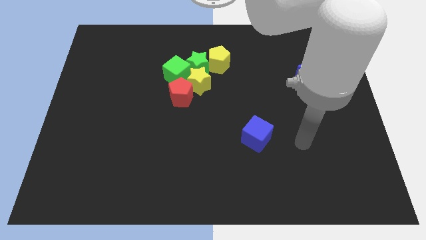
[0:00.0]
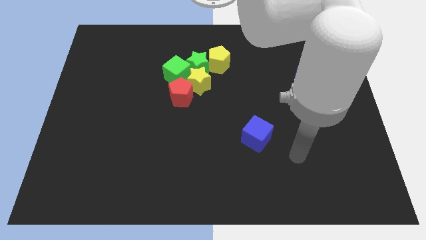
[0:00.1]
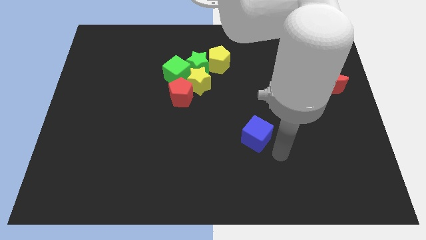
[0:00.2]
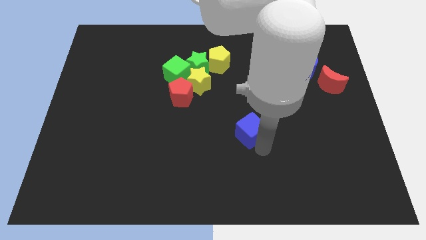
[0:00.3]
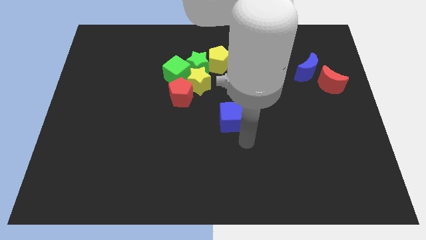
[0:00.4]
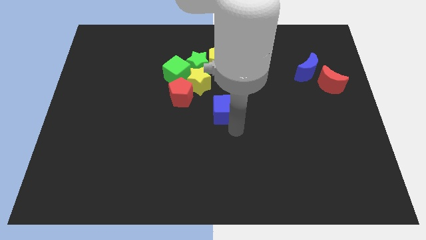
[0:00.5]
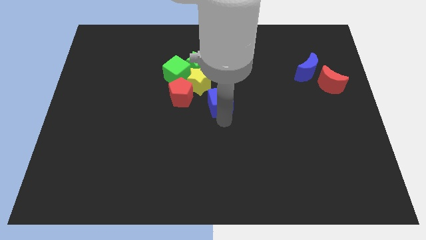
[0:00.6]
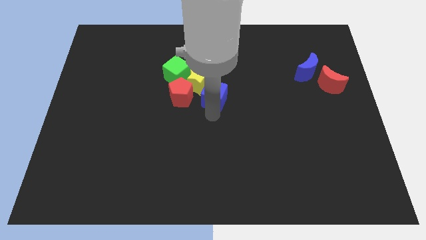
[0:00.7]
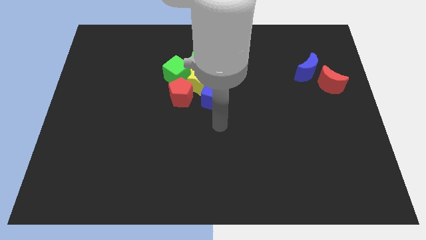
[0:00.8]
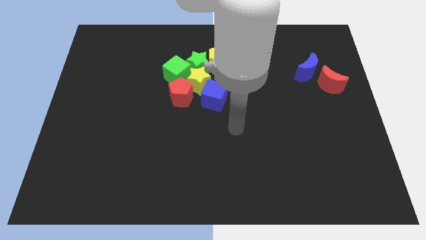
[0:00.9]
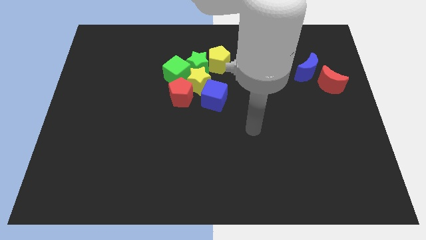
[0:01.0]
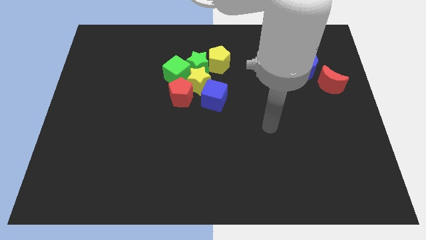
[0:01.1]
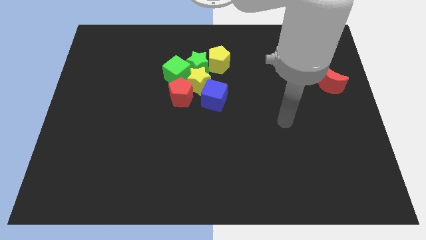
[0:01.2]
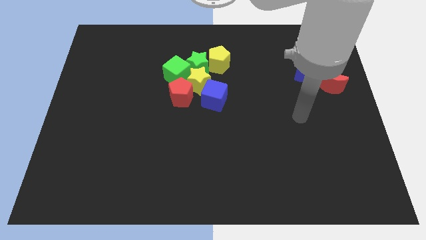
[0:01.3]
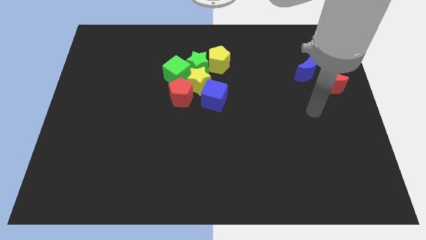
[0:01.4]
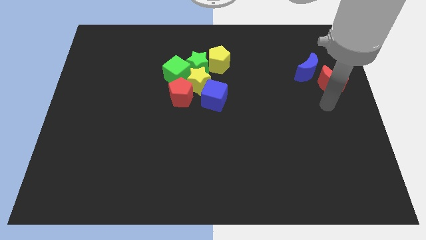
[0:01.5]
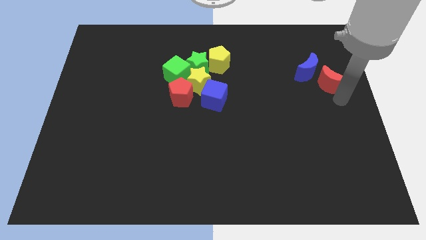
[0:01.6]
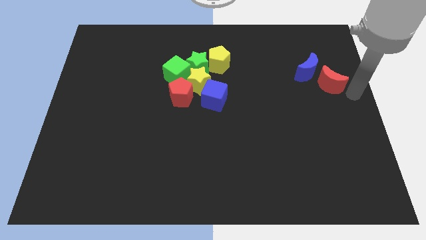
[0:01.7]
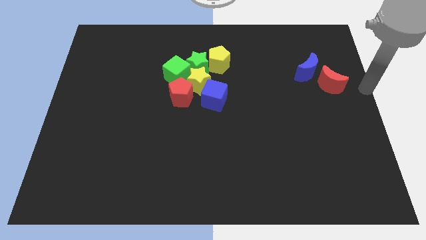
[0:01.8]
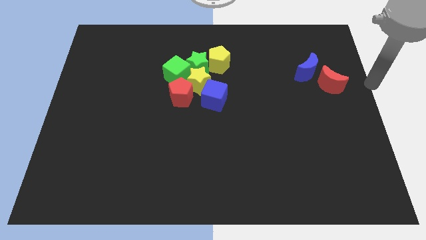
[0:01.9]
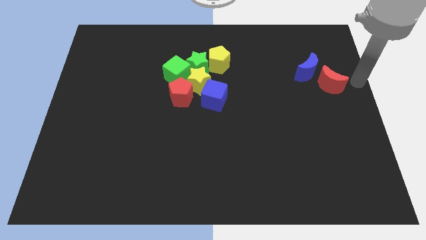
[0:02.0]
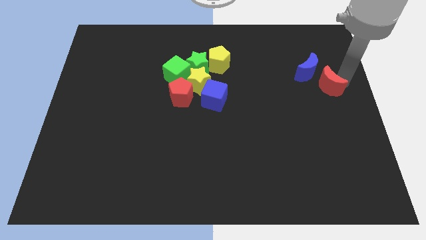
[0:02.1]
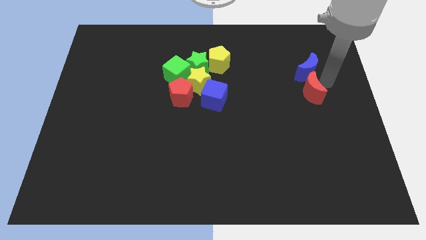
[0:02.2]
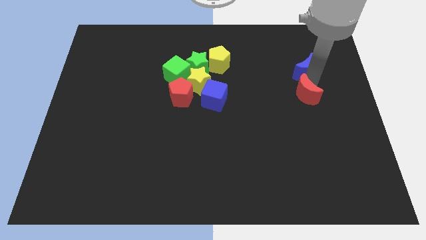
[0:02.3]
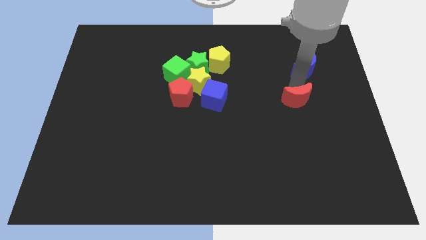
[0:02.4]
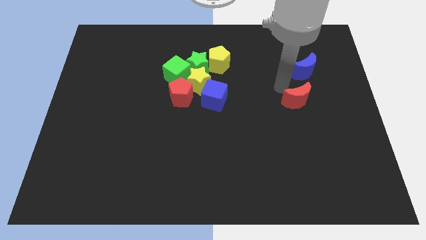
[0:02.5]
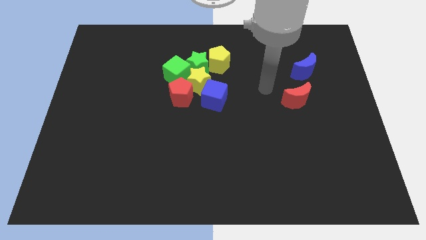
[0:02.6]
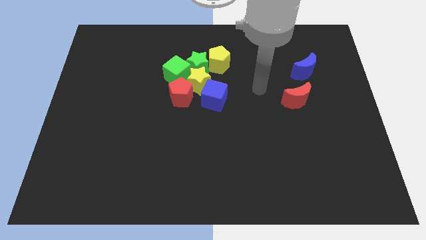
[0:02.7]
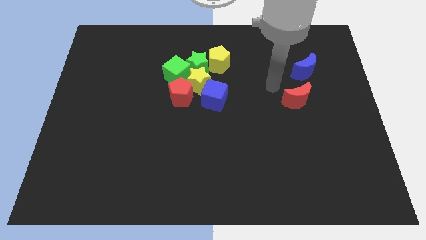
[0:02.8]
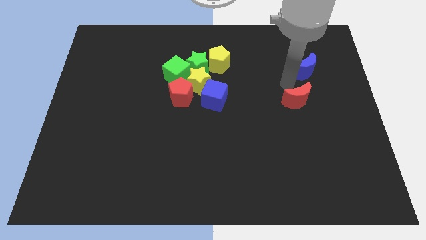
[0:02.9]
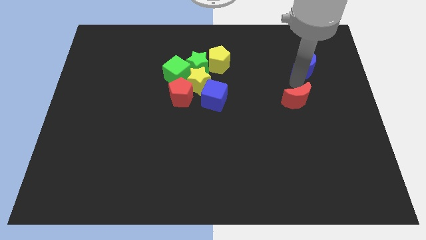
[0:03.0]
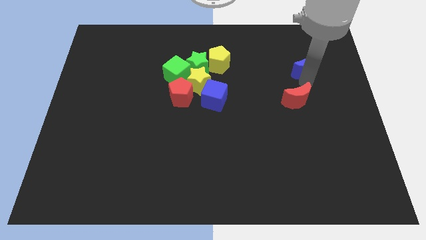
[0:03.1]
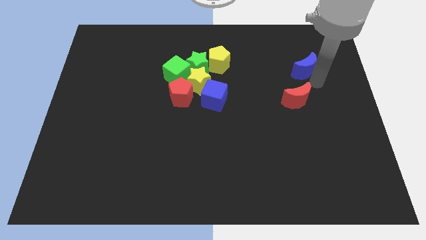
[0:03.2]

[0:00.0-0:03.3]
move the red crescent adjacent to the blue cube

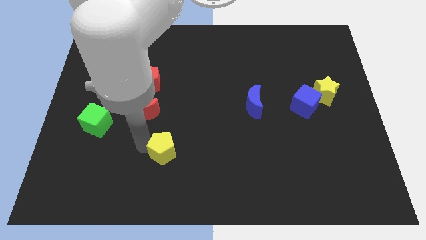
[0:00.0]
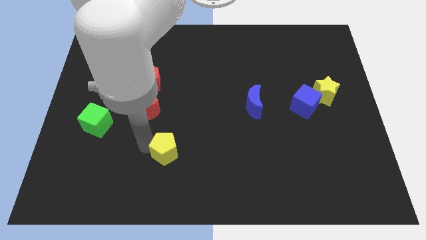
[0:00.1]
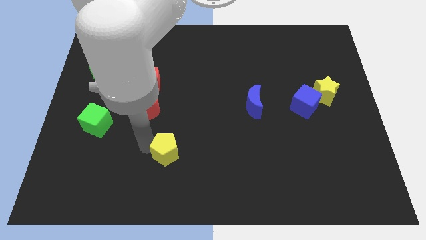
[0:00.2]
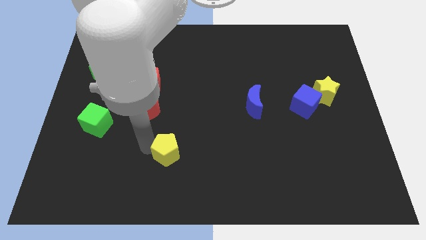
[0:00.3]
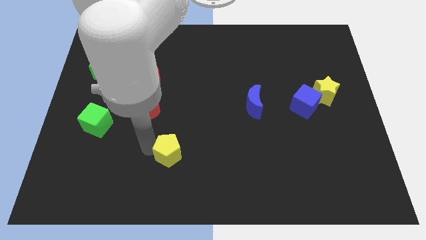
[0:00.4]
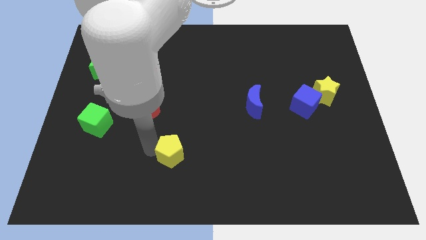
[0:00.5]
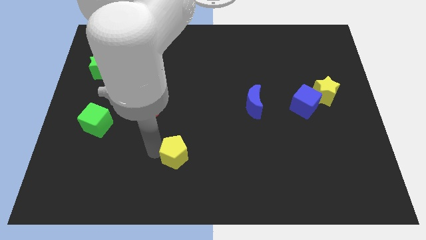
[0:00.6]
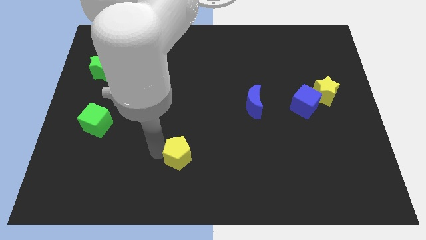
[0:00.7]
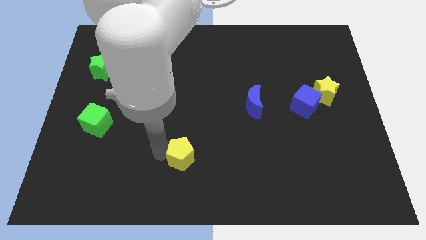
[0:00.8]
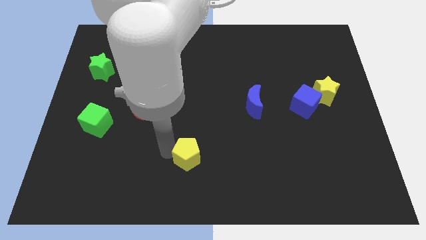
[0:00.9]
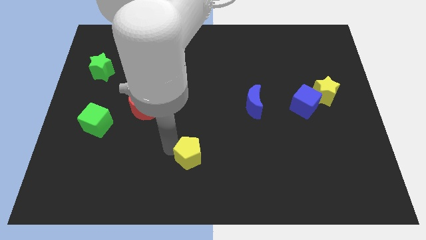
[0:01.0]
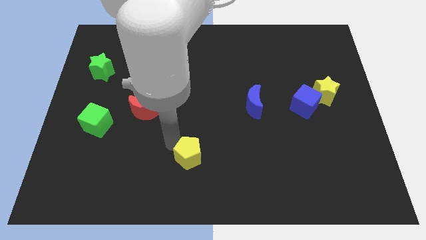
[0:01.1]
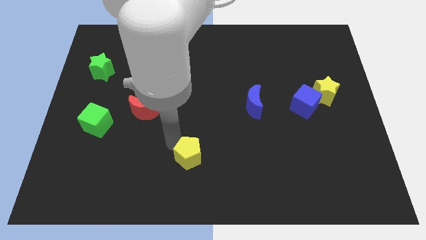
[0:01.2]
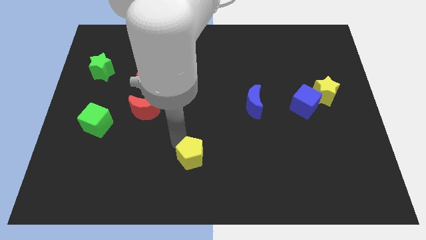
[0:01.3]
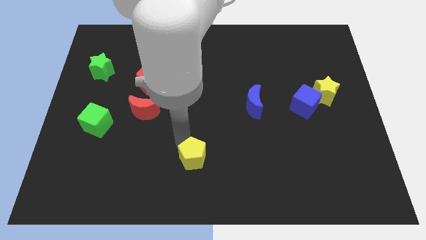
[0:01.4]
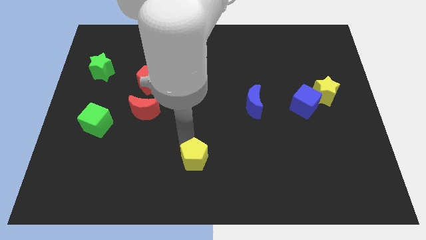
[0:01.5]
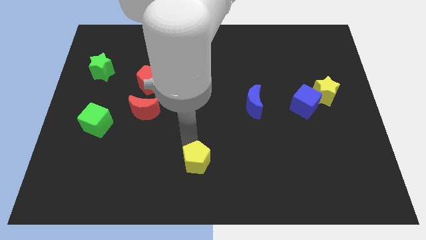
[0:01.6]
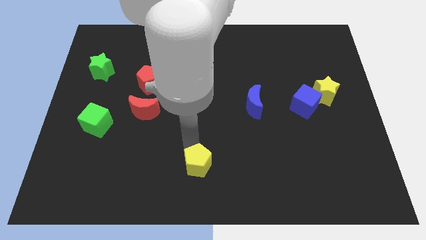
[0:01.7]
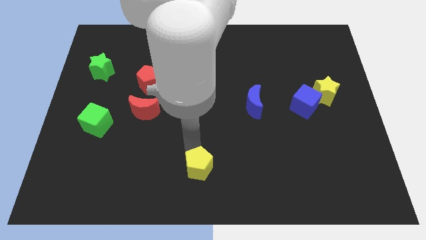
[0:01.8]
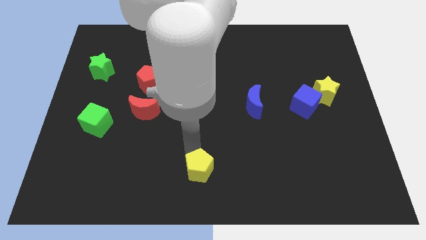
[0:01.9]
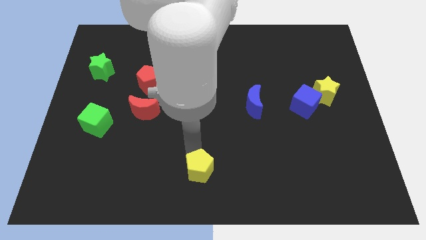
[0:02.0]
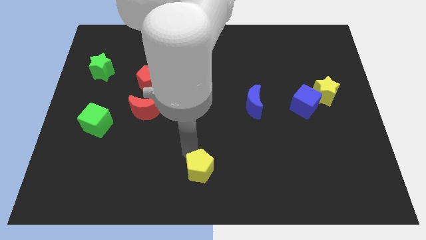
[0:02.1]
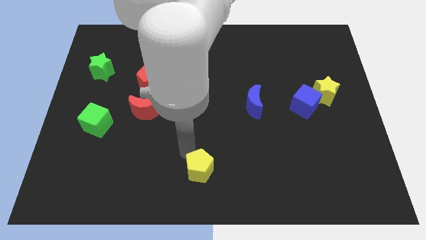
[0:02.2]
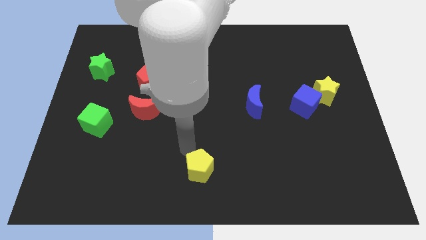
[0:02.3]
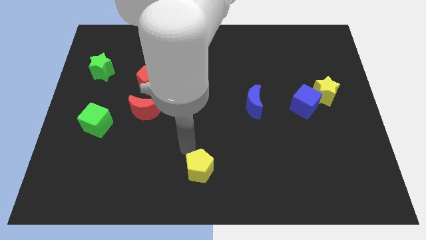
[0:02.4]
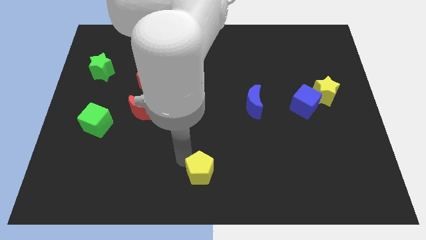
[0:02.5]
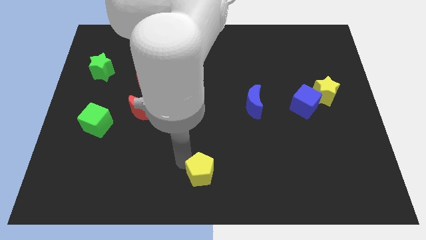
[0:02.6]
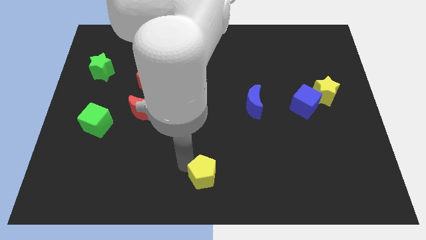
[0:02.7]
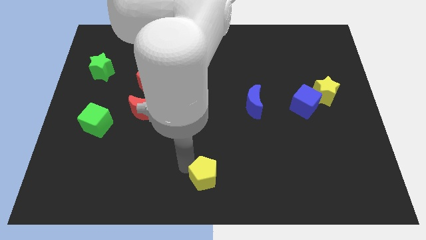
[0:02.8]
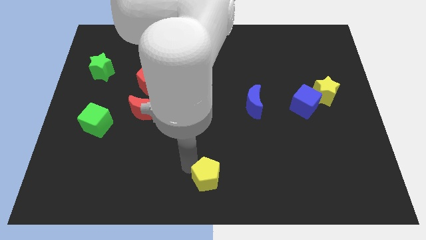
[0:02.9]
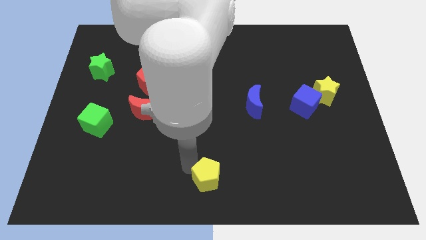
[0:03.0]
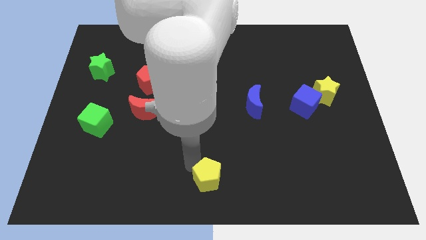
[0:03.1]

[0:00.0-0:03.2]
push yellow pentagon to the bottom center

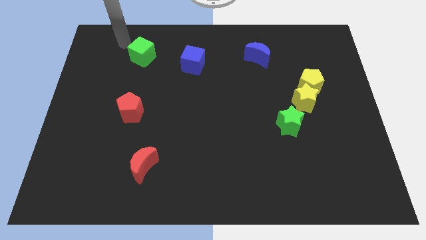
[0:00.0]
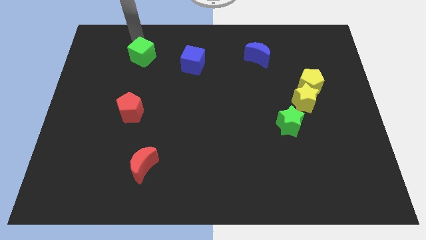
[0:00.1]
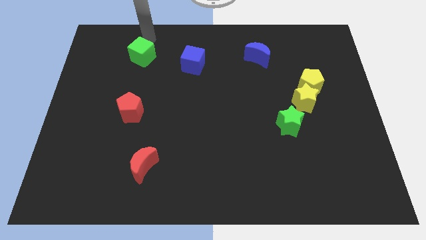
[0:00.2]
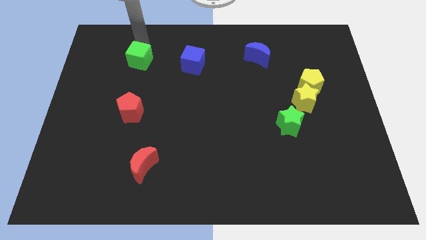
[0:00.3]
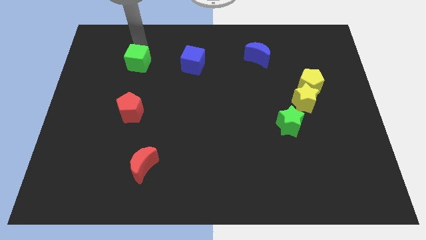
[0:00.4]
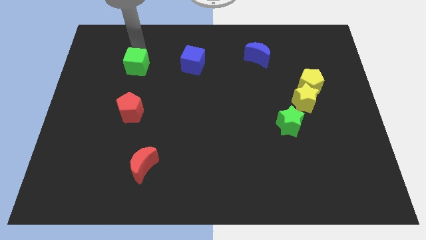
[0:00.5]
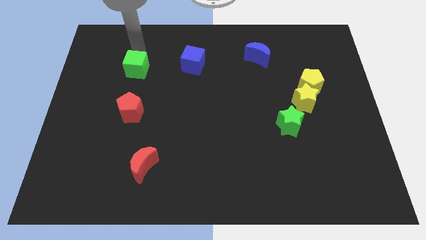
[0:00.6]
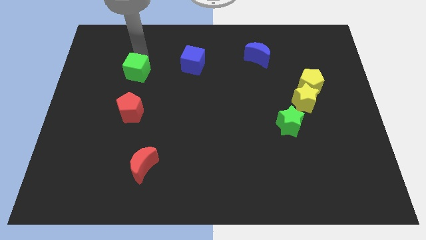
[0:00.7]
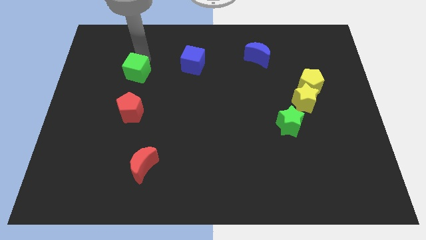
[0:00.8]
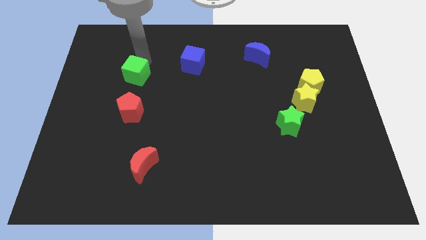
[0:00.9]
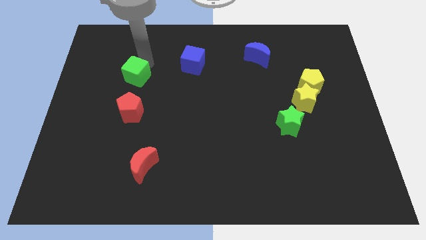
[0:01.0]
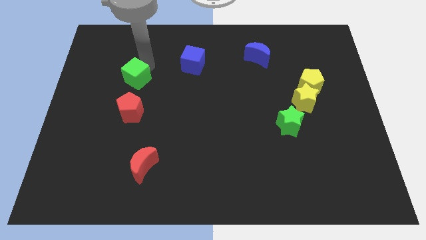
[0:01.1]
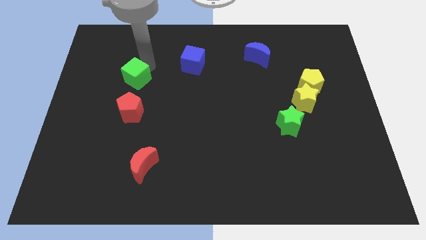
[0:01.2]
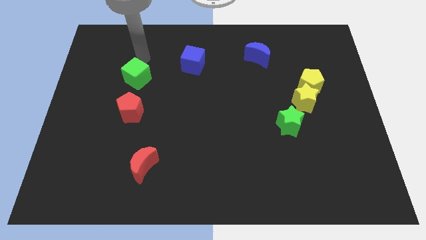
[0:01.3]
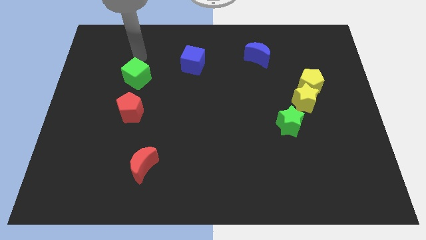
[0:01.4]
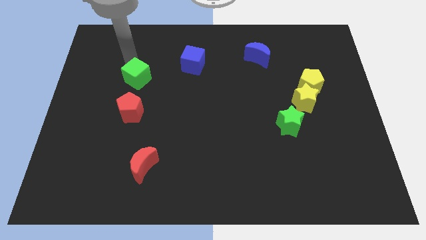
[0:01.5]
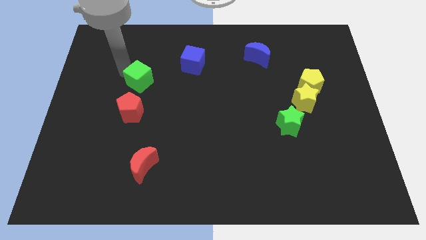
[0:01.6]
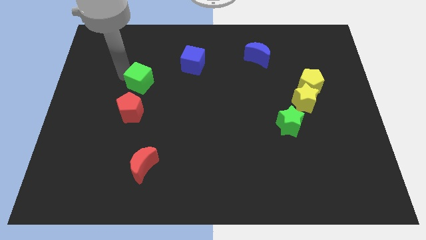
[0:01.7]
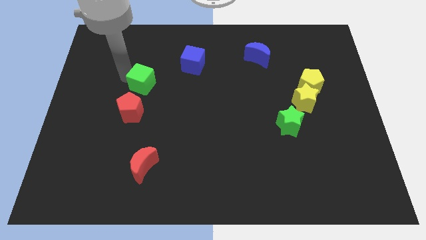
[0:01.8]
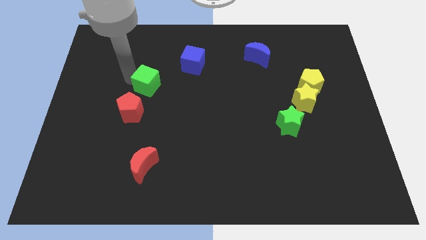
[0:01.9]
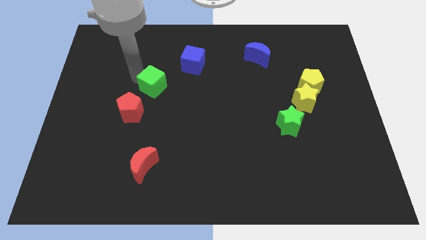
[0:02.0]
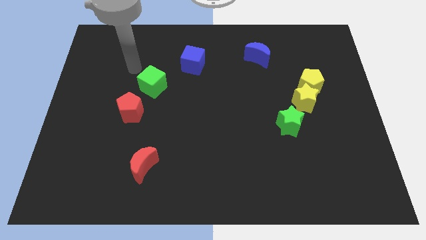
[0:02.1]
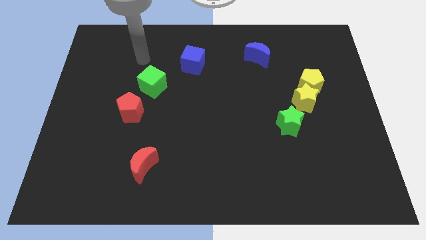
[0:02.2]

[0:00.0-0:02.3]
place the green cube in between blue cube and red pentagon

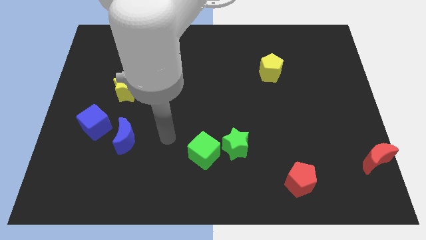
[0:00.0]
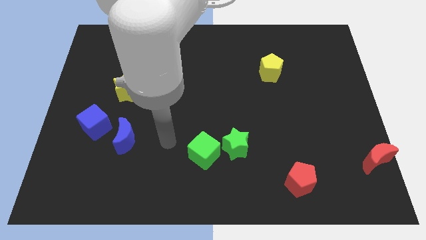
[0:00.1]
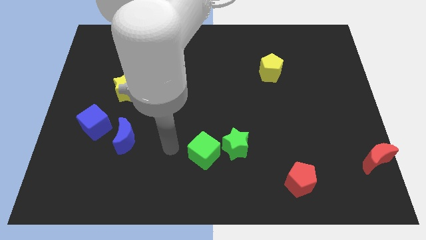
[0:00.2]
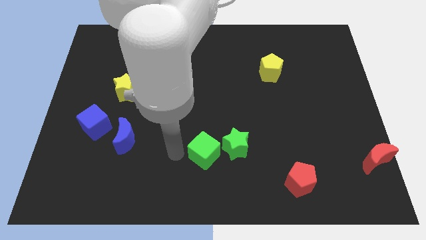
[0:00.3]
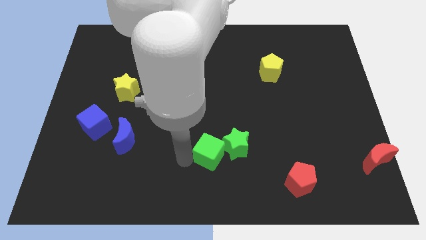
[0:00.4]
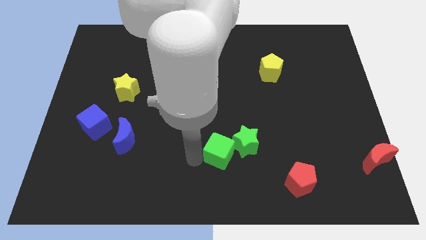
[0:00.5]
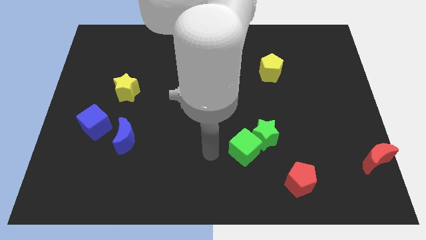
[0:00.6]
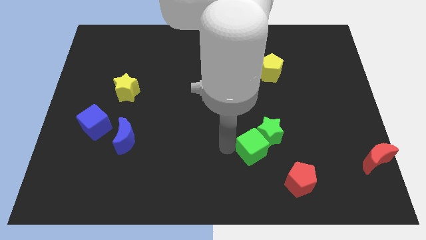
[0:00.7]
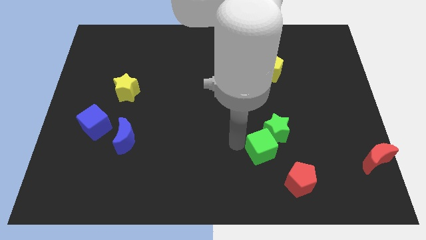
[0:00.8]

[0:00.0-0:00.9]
push the blue cube into the green star
